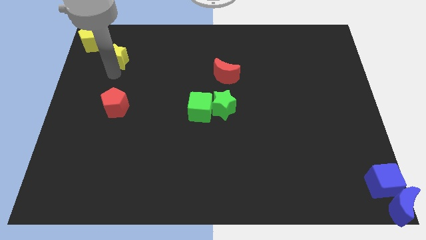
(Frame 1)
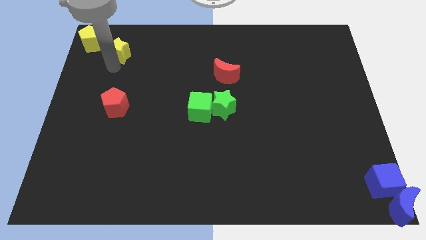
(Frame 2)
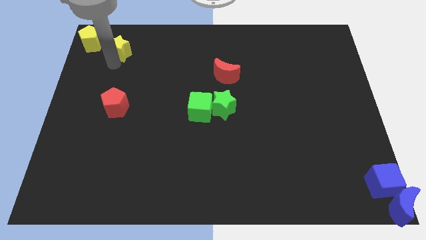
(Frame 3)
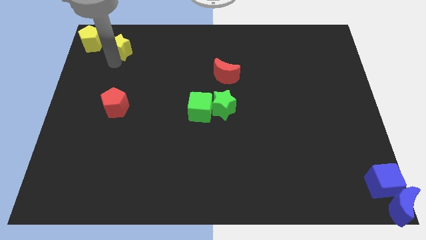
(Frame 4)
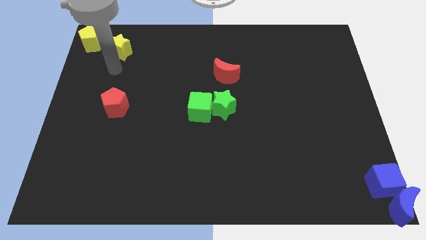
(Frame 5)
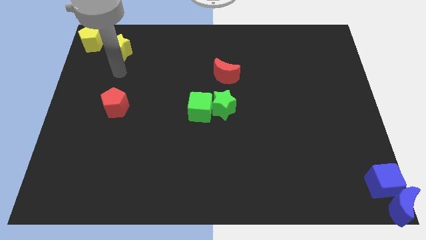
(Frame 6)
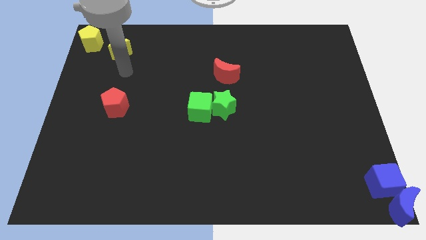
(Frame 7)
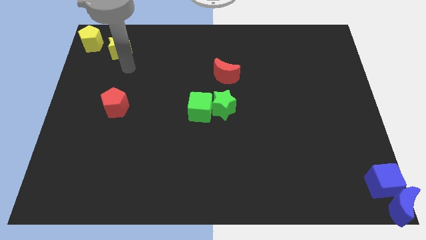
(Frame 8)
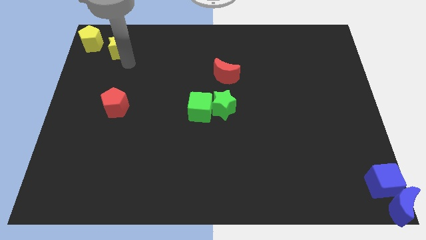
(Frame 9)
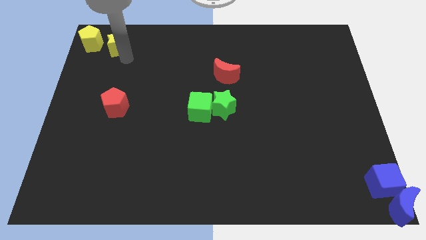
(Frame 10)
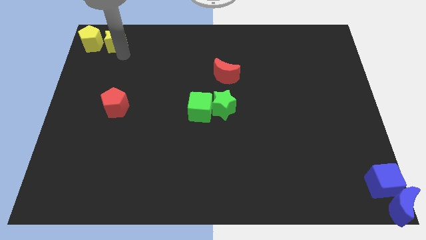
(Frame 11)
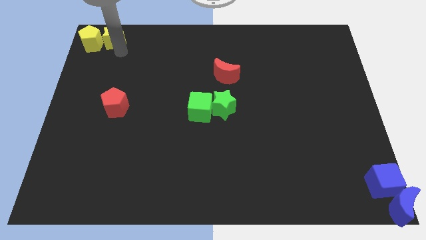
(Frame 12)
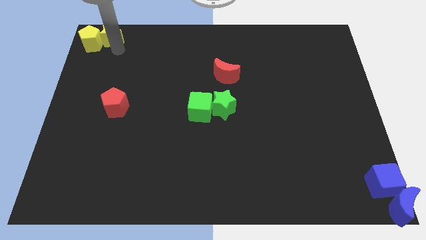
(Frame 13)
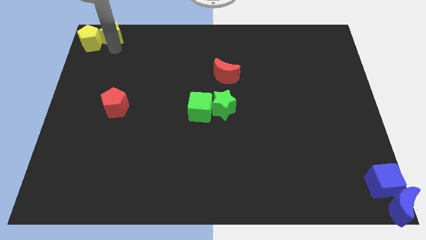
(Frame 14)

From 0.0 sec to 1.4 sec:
move the yellow star to the right of the yellow pentagon

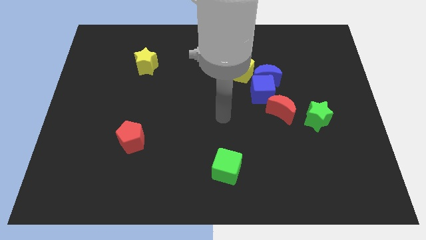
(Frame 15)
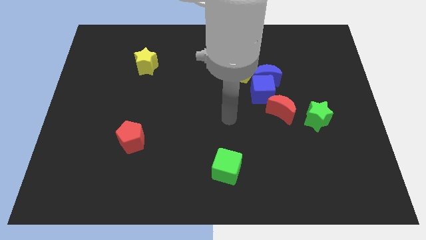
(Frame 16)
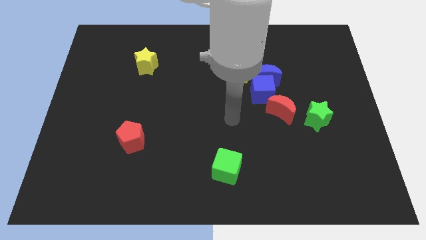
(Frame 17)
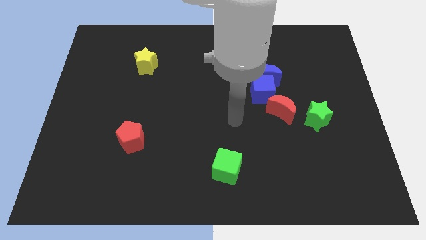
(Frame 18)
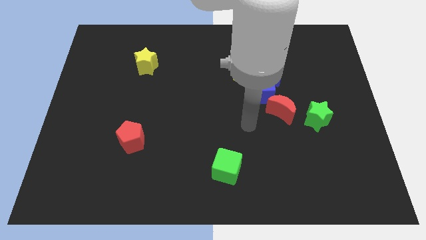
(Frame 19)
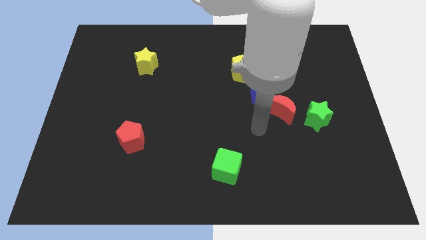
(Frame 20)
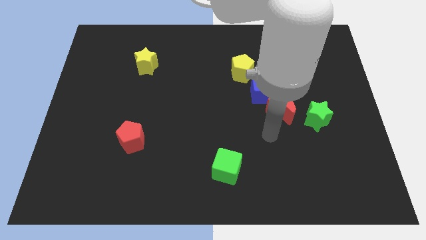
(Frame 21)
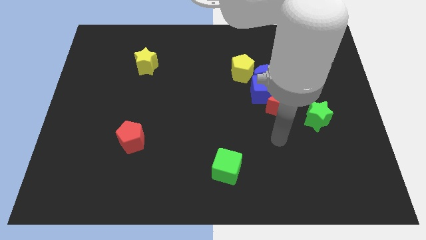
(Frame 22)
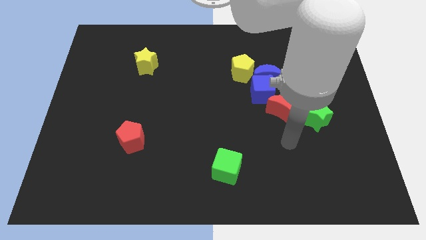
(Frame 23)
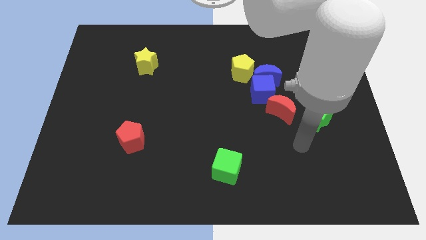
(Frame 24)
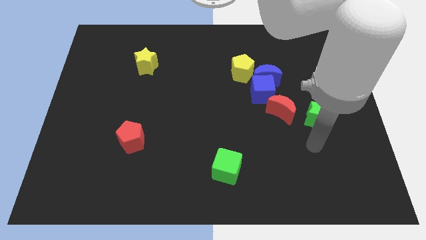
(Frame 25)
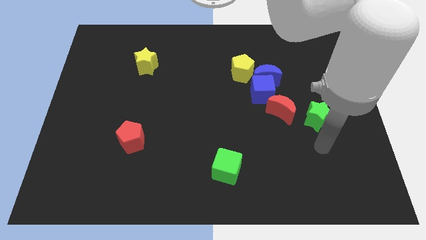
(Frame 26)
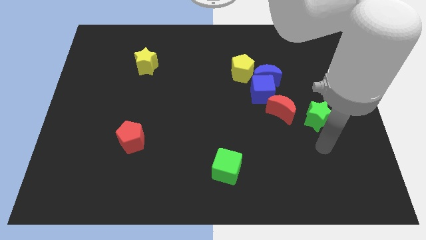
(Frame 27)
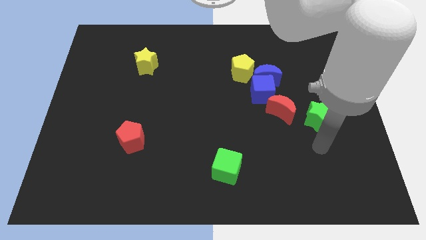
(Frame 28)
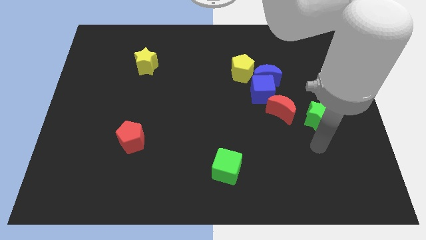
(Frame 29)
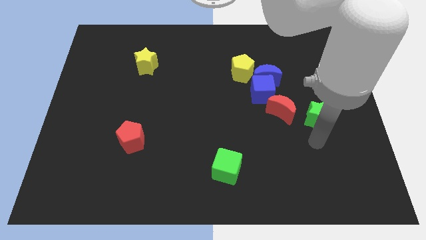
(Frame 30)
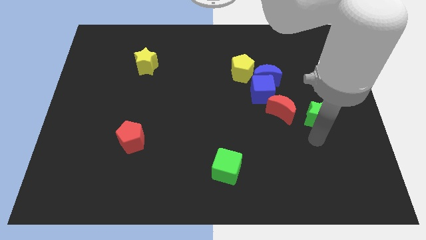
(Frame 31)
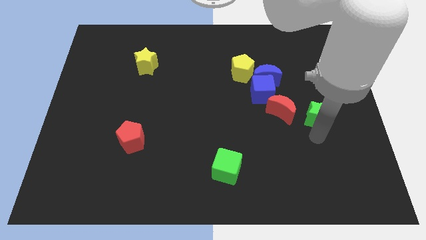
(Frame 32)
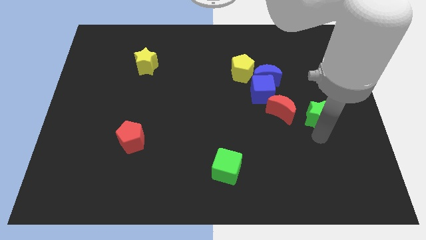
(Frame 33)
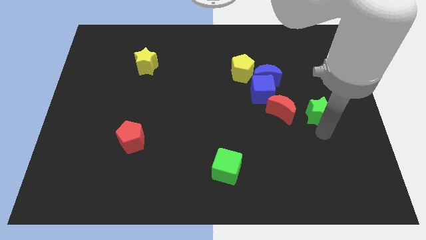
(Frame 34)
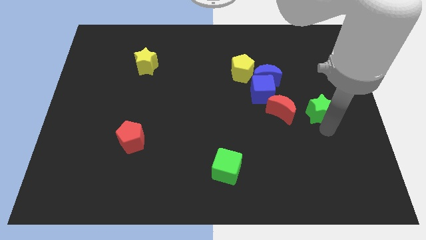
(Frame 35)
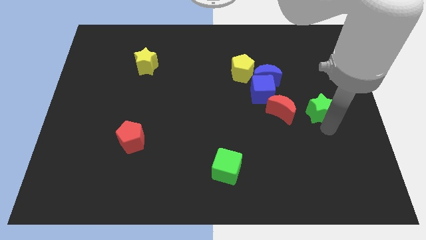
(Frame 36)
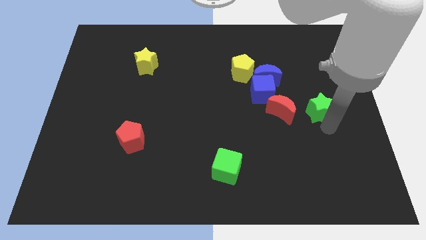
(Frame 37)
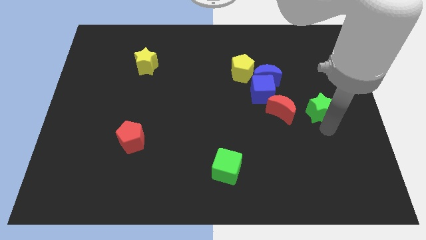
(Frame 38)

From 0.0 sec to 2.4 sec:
push the green star to the top of the board

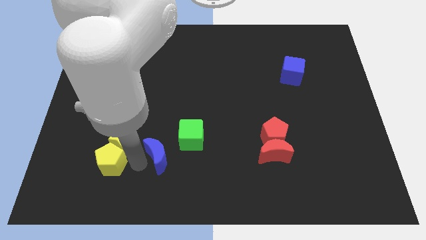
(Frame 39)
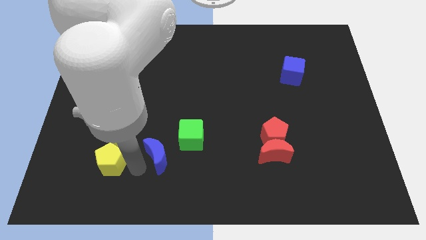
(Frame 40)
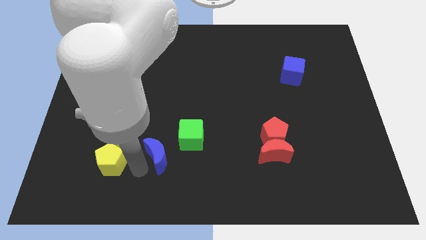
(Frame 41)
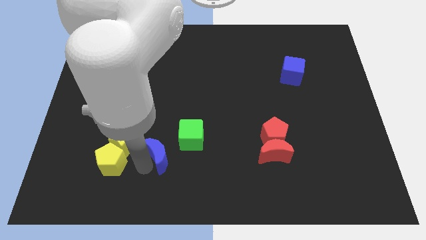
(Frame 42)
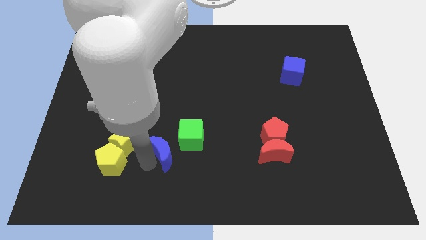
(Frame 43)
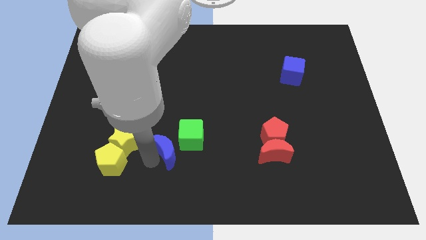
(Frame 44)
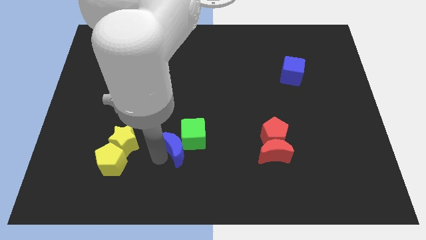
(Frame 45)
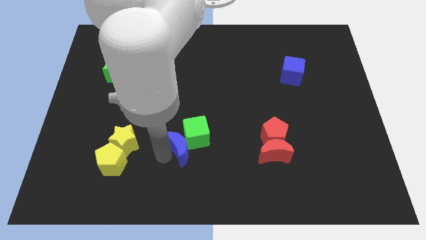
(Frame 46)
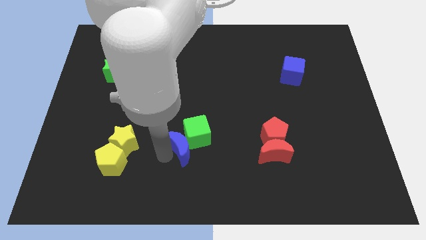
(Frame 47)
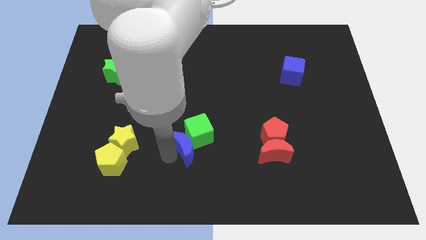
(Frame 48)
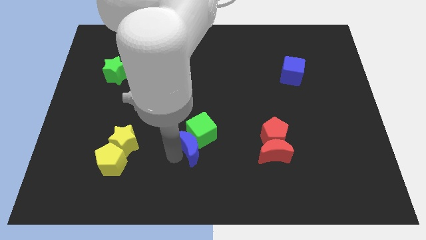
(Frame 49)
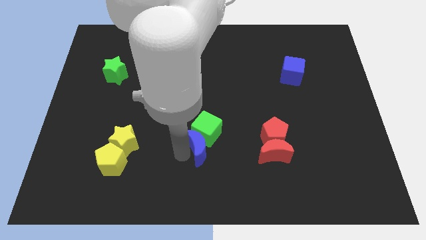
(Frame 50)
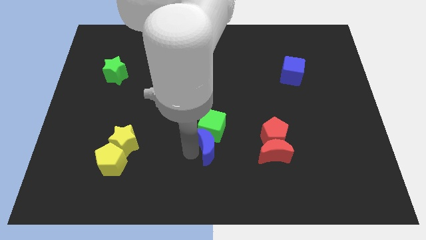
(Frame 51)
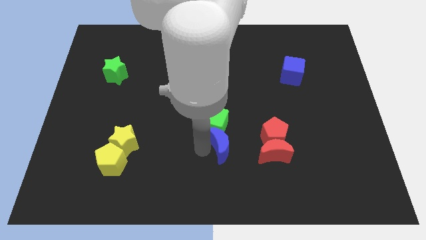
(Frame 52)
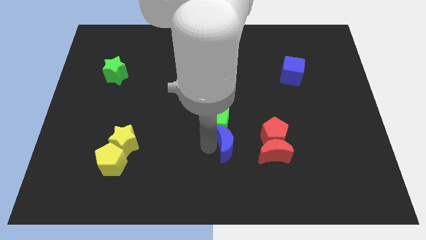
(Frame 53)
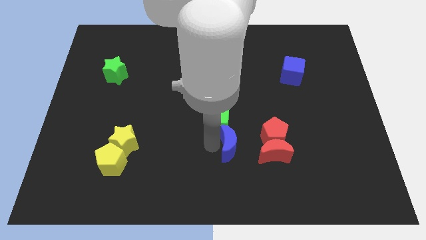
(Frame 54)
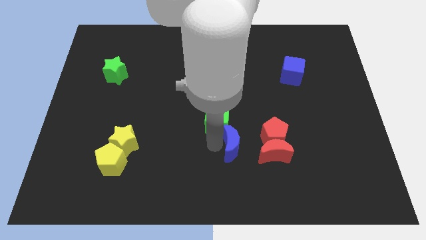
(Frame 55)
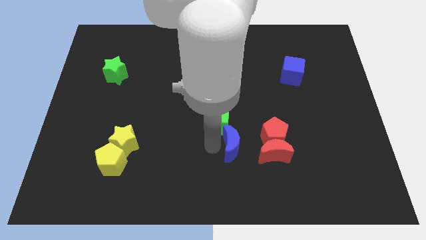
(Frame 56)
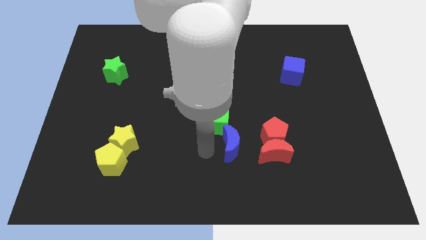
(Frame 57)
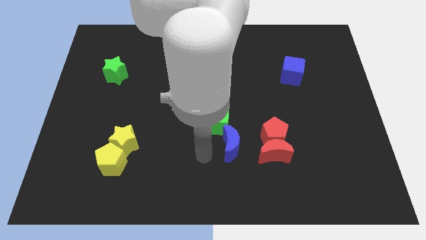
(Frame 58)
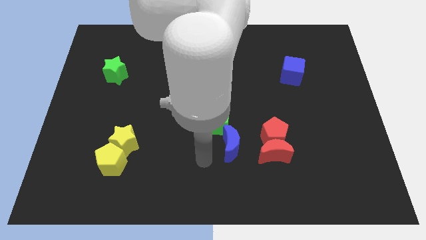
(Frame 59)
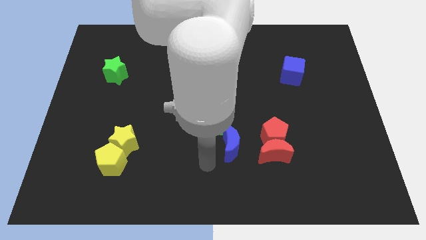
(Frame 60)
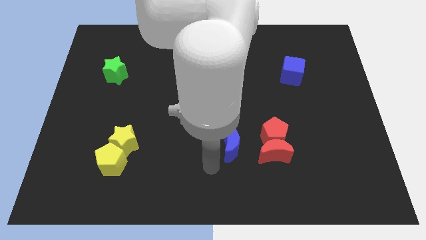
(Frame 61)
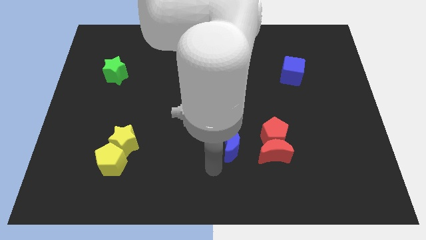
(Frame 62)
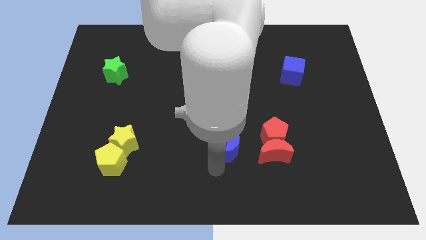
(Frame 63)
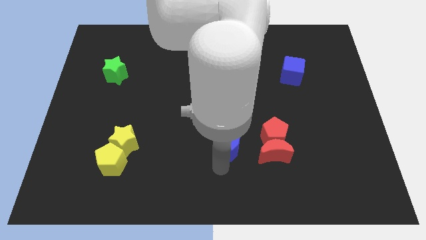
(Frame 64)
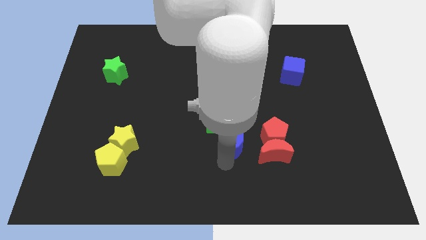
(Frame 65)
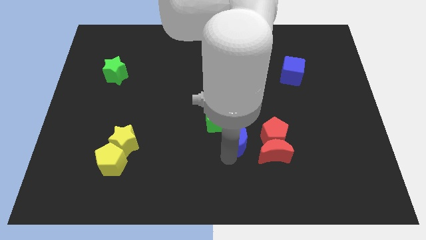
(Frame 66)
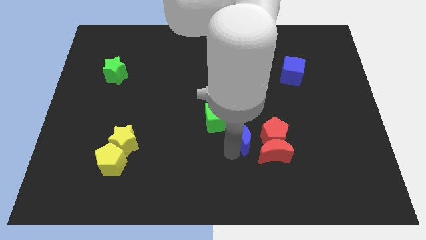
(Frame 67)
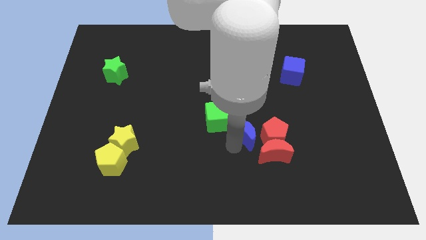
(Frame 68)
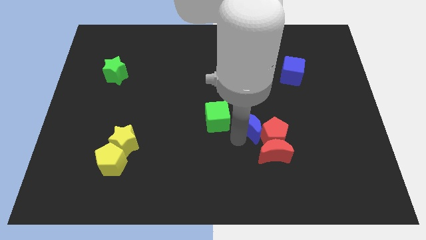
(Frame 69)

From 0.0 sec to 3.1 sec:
push the green cube with the blue crescent

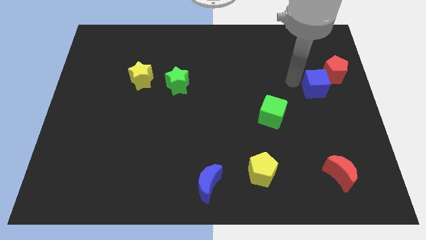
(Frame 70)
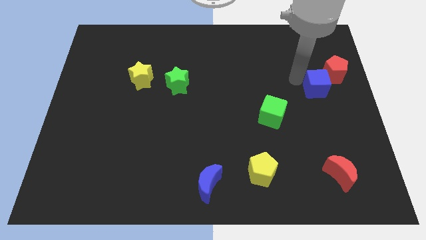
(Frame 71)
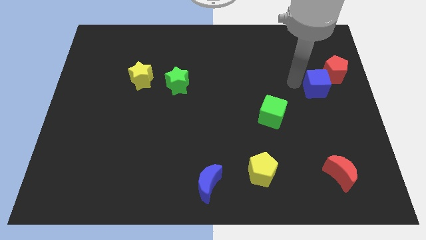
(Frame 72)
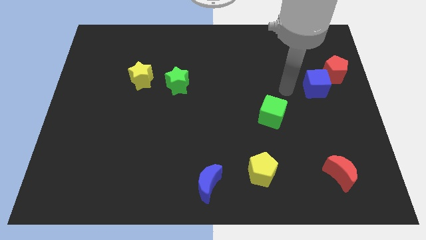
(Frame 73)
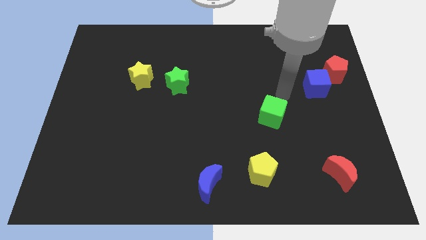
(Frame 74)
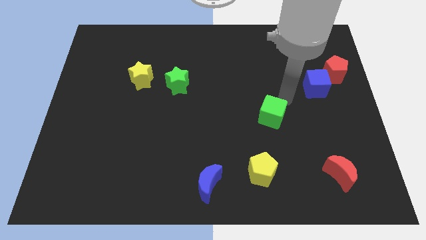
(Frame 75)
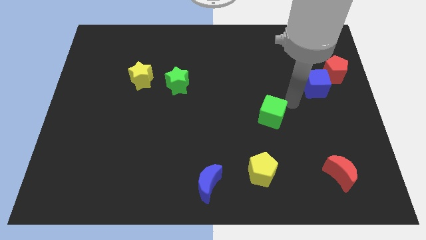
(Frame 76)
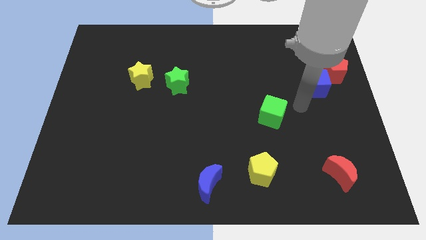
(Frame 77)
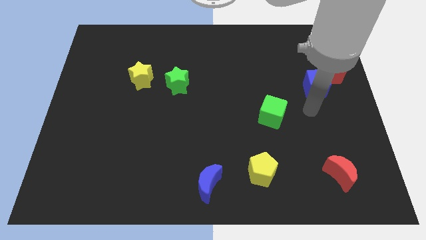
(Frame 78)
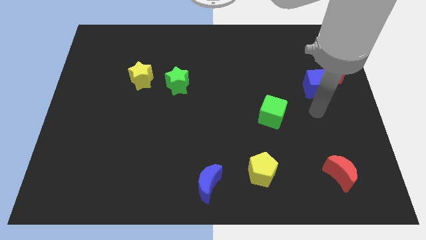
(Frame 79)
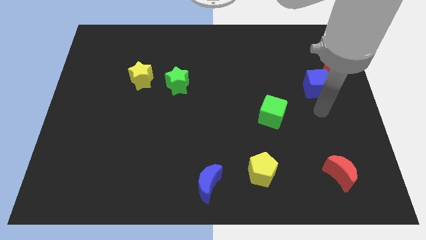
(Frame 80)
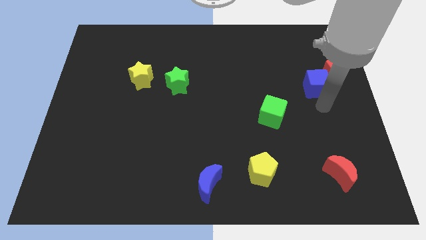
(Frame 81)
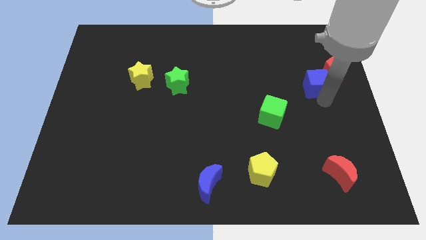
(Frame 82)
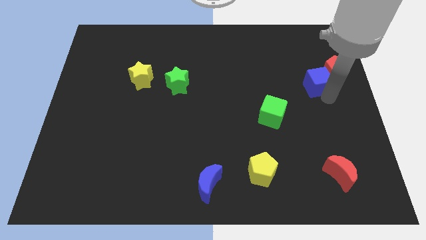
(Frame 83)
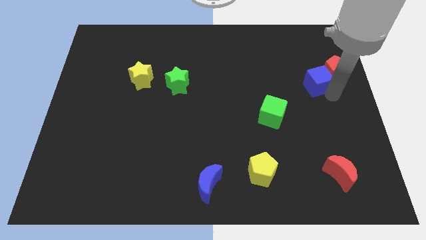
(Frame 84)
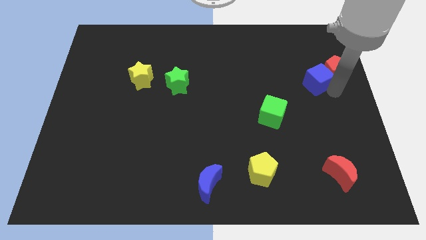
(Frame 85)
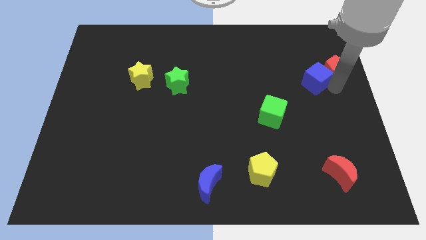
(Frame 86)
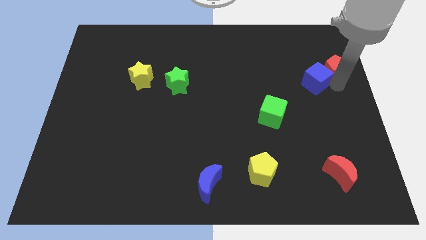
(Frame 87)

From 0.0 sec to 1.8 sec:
place blue cube to the left of red pentagon

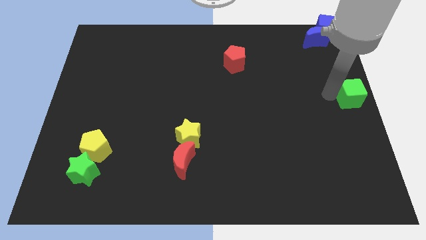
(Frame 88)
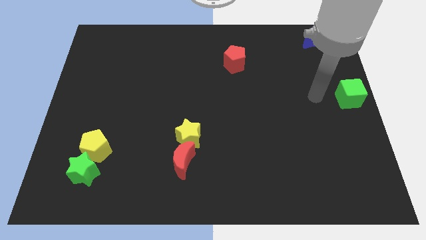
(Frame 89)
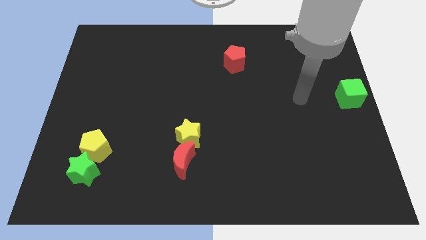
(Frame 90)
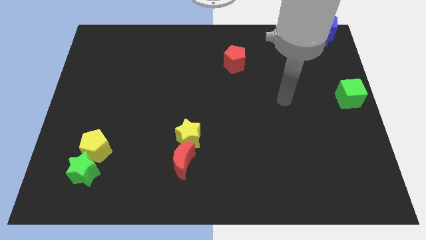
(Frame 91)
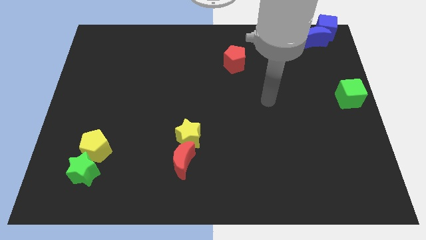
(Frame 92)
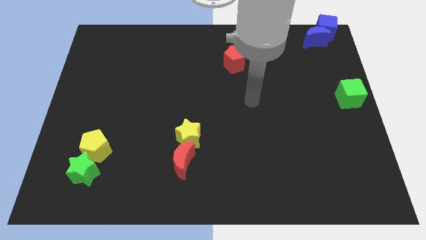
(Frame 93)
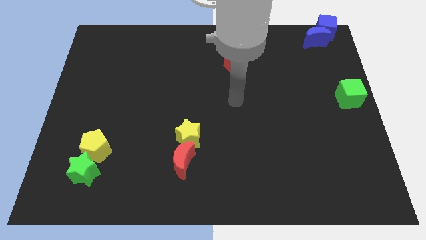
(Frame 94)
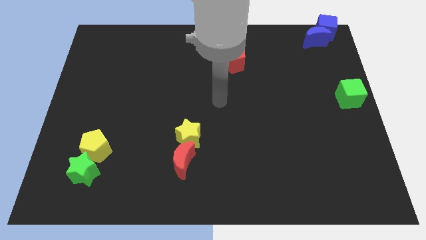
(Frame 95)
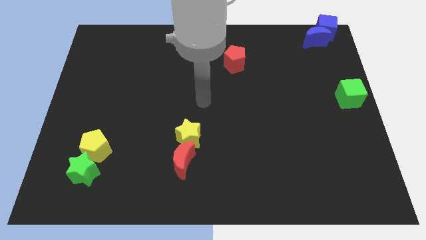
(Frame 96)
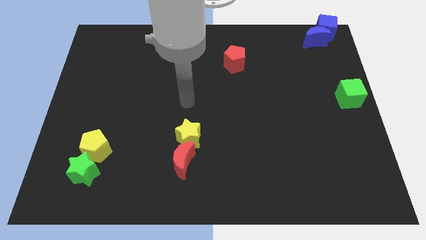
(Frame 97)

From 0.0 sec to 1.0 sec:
move your away from green cube
